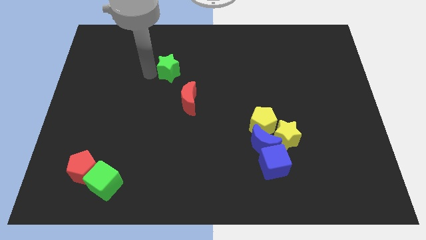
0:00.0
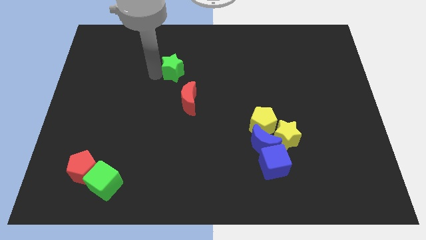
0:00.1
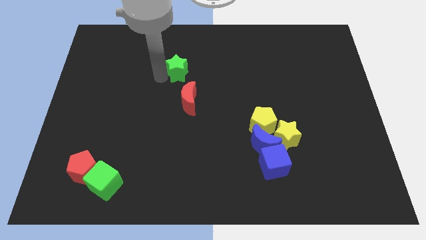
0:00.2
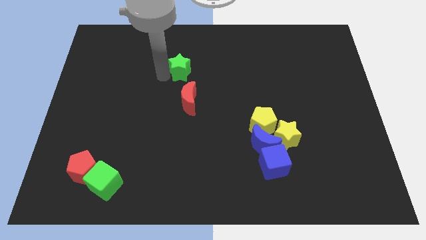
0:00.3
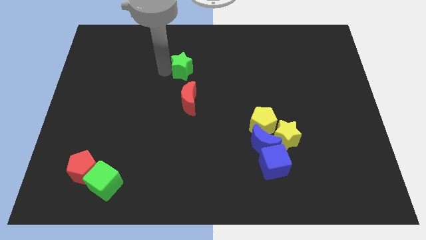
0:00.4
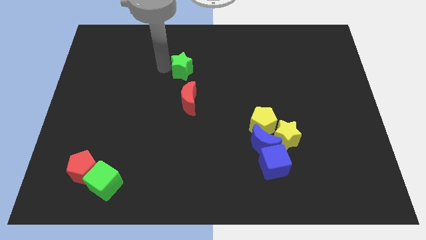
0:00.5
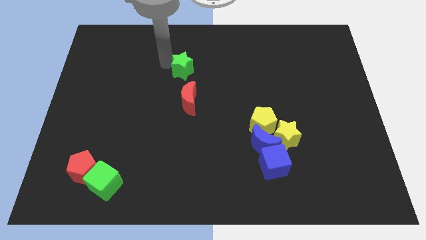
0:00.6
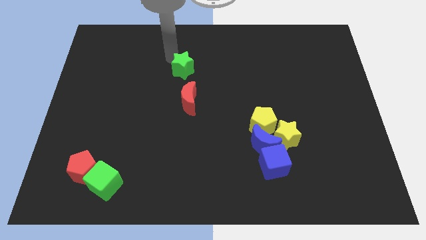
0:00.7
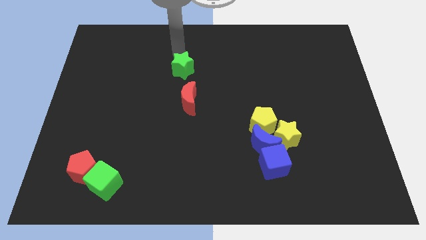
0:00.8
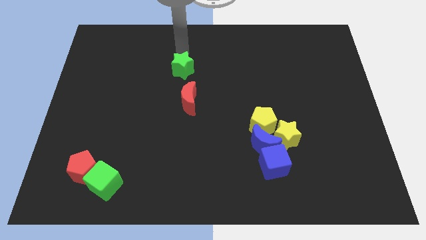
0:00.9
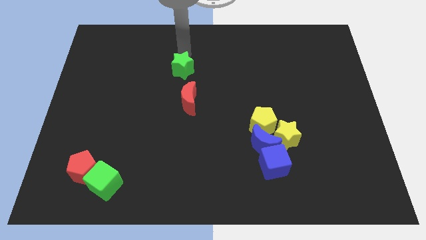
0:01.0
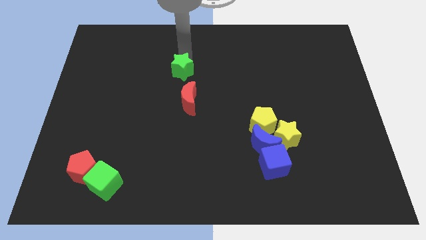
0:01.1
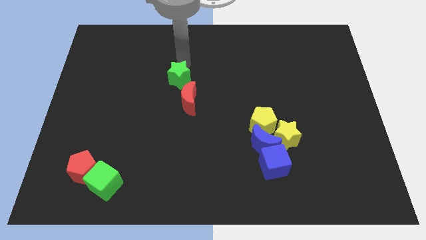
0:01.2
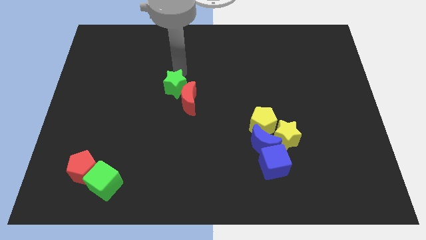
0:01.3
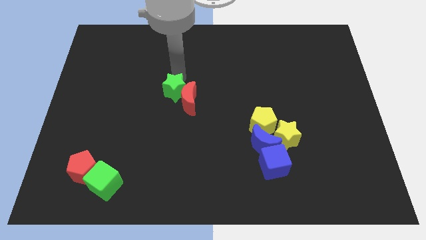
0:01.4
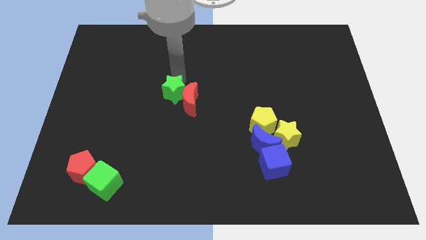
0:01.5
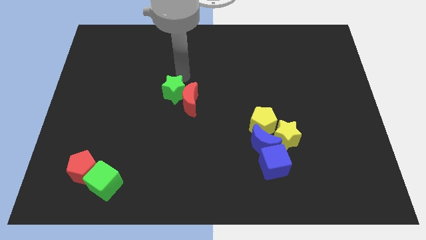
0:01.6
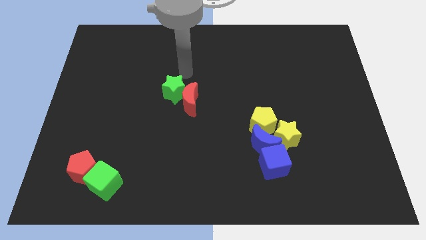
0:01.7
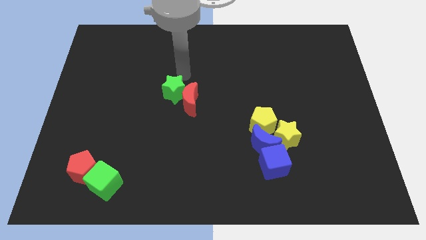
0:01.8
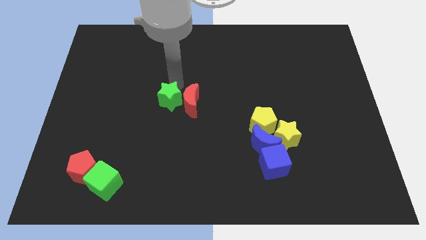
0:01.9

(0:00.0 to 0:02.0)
push the green star to the left of the red crescent

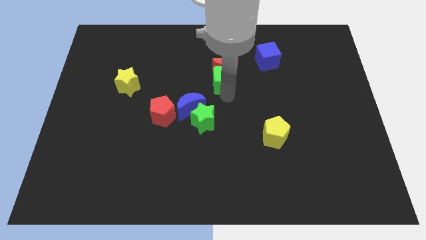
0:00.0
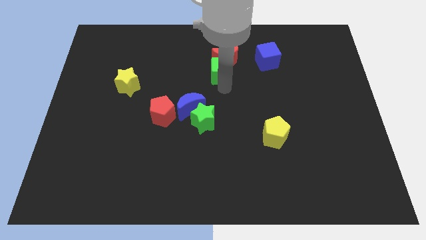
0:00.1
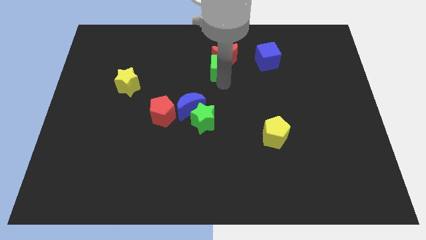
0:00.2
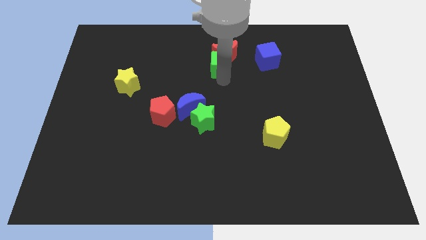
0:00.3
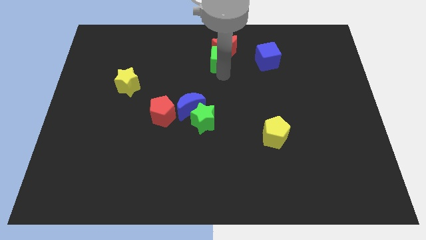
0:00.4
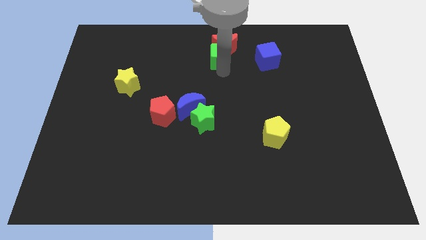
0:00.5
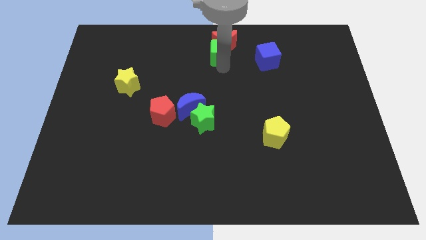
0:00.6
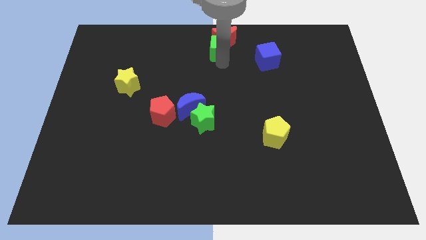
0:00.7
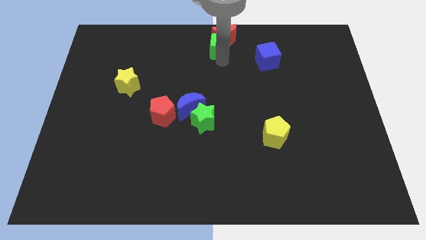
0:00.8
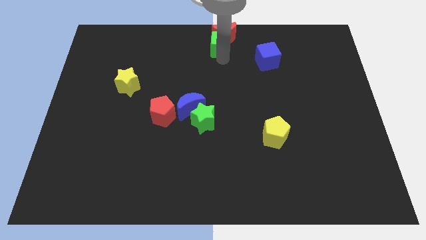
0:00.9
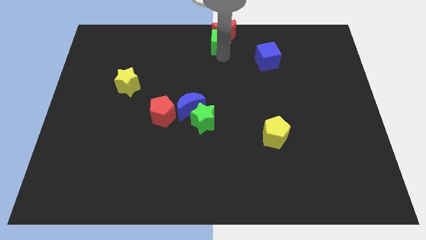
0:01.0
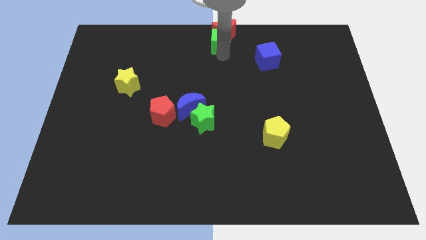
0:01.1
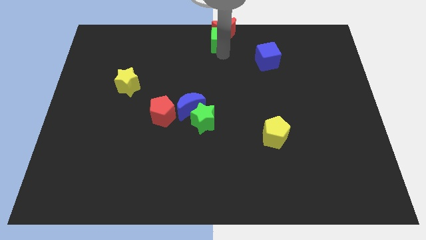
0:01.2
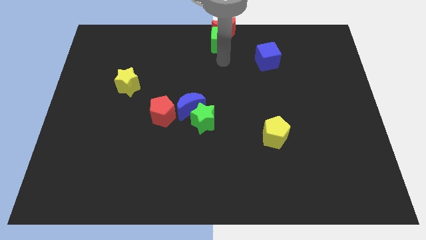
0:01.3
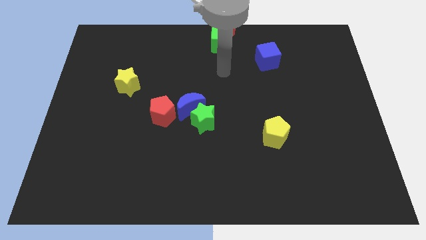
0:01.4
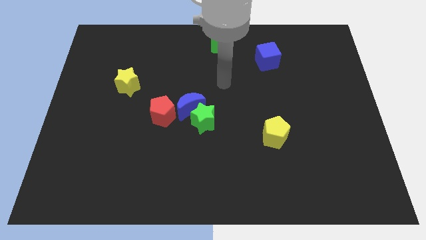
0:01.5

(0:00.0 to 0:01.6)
move green cube and red crescent towards the top center of the board

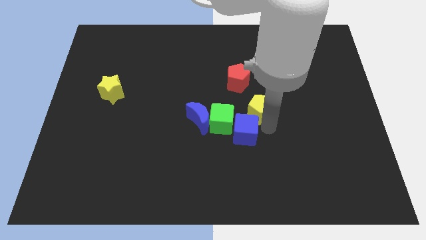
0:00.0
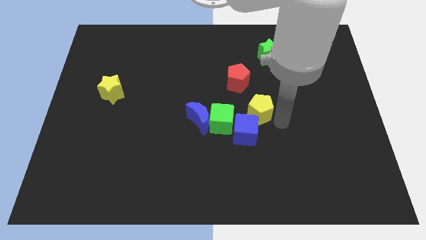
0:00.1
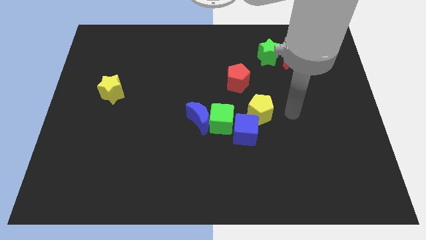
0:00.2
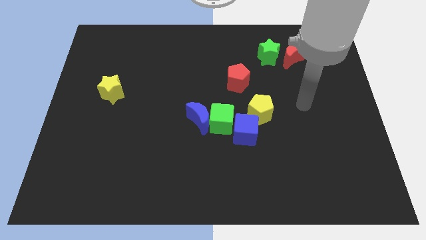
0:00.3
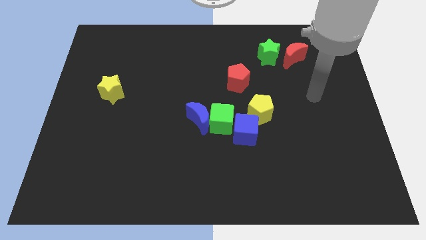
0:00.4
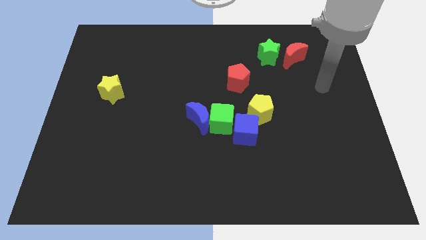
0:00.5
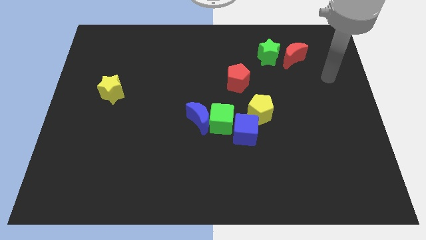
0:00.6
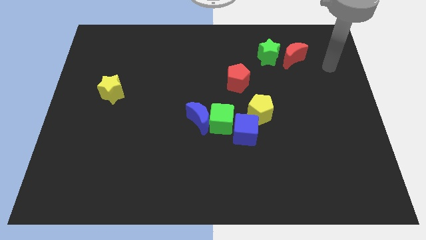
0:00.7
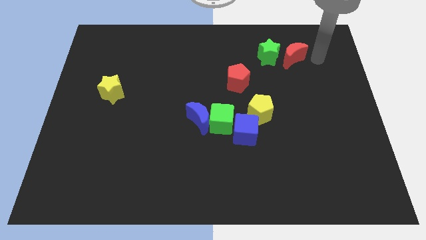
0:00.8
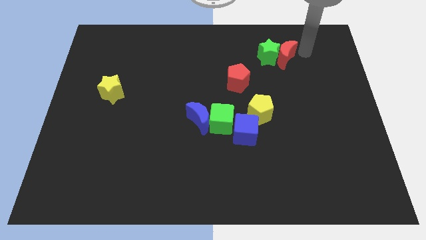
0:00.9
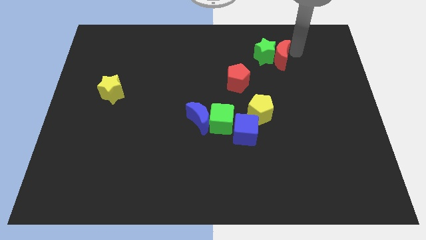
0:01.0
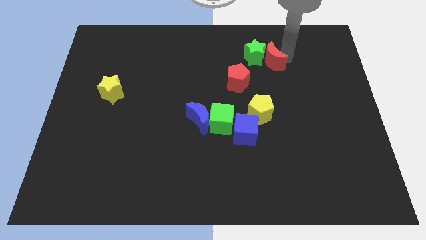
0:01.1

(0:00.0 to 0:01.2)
push the red crescent into the green star

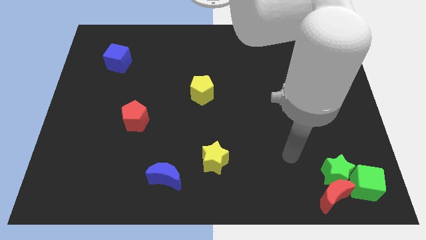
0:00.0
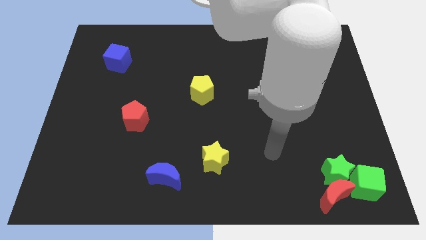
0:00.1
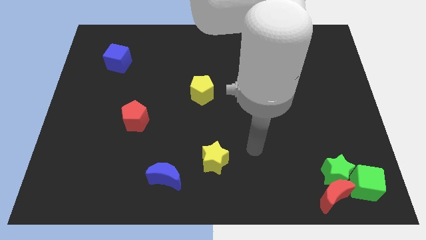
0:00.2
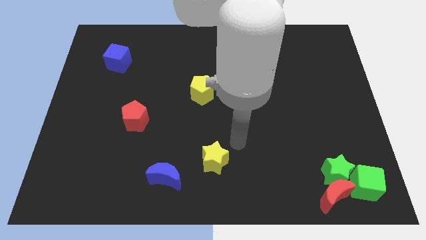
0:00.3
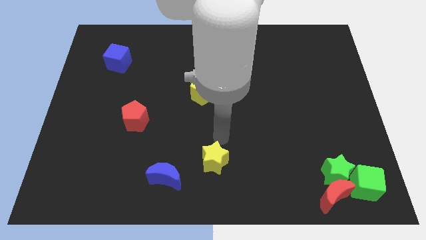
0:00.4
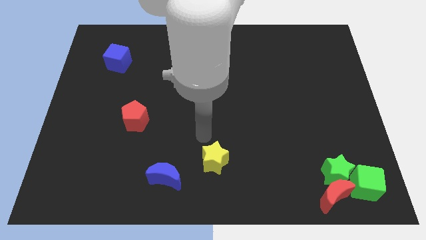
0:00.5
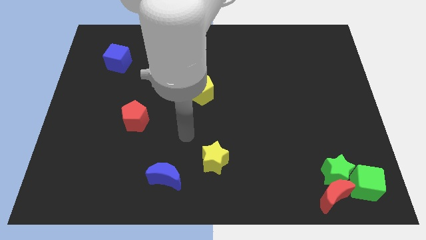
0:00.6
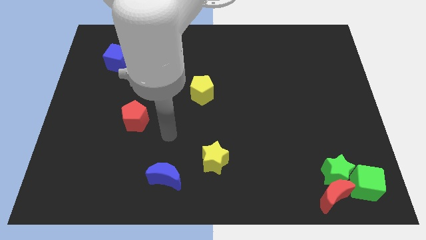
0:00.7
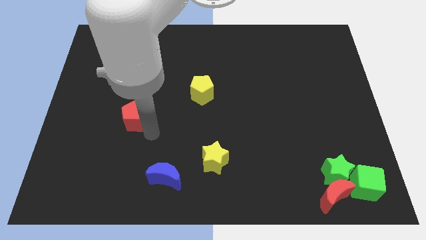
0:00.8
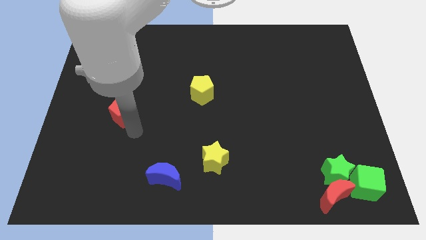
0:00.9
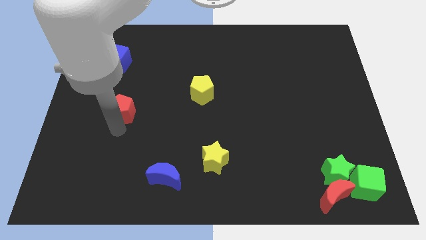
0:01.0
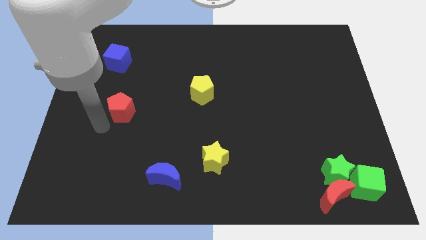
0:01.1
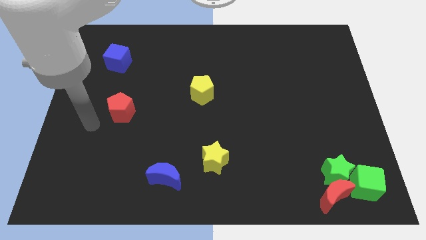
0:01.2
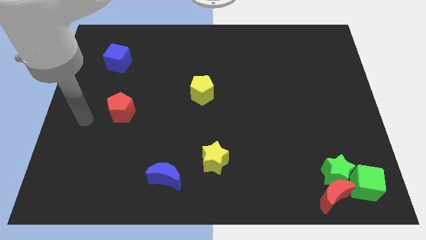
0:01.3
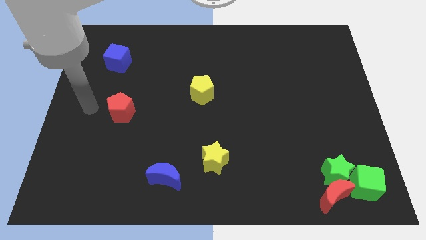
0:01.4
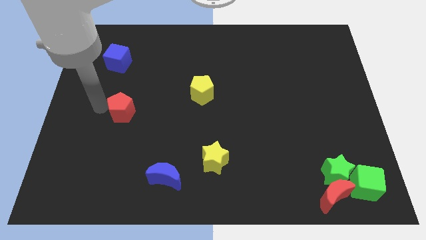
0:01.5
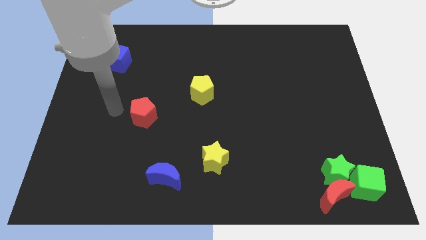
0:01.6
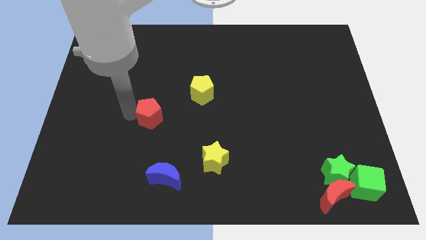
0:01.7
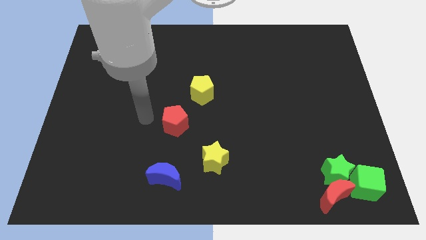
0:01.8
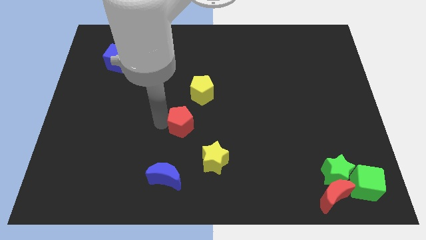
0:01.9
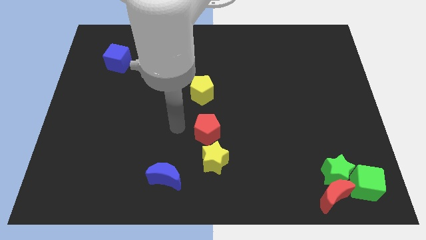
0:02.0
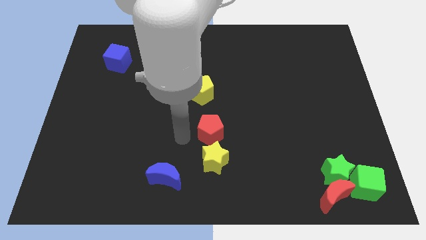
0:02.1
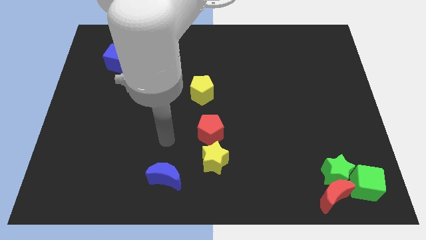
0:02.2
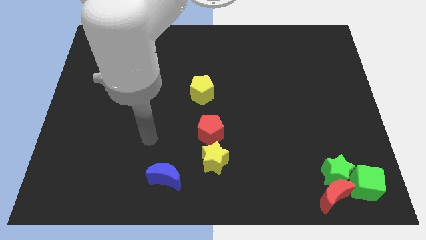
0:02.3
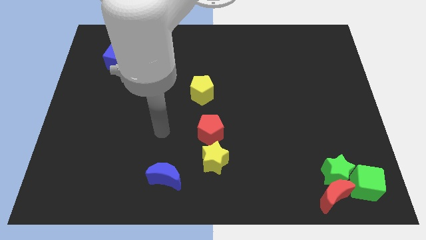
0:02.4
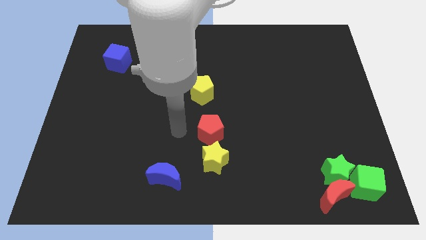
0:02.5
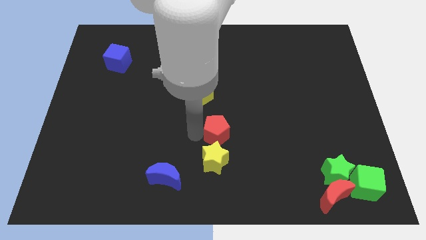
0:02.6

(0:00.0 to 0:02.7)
push the red pentagon on top of the yellow star

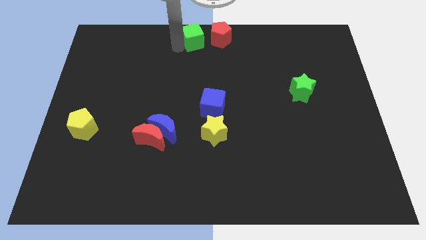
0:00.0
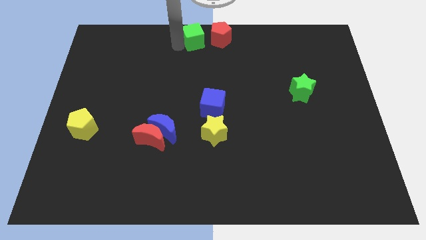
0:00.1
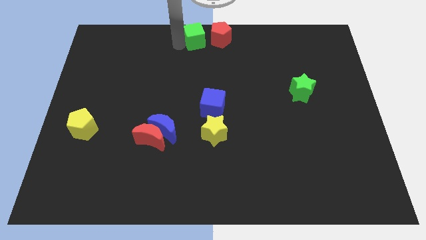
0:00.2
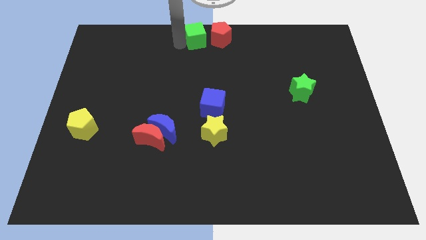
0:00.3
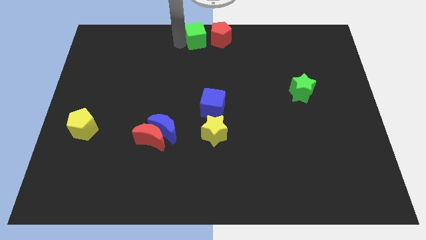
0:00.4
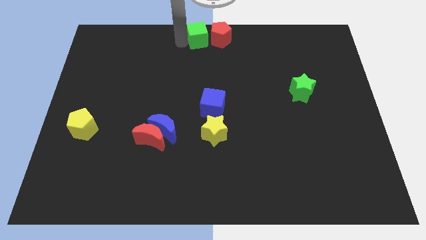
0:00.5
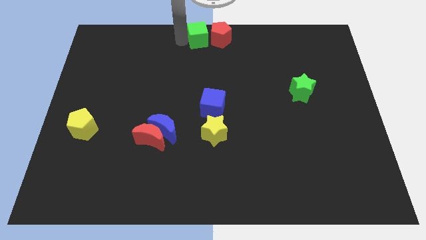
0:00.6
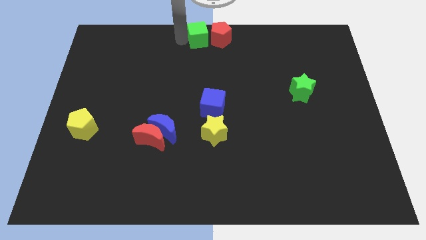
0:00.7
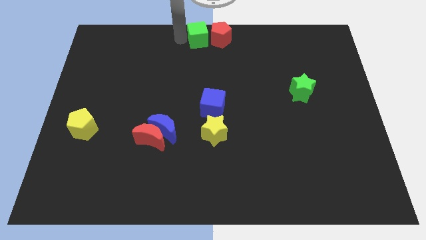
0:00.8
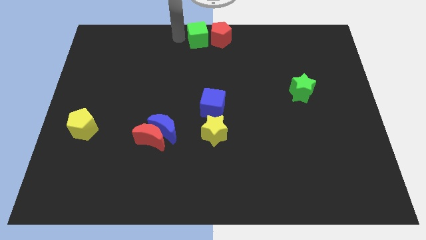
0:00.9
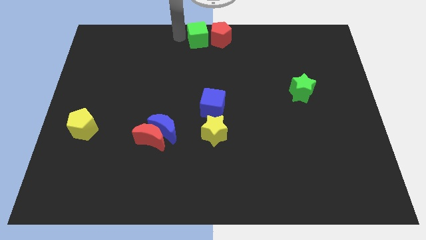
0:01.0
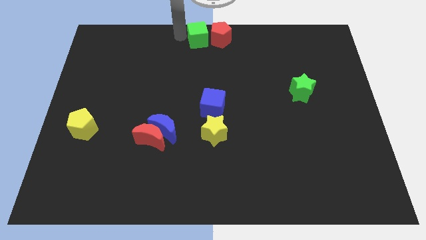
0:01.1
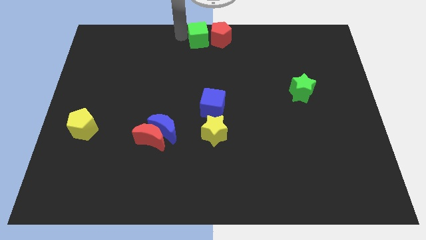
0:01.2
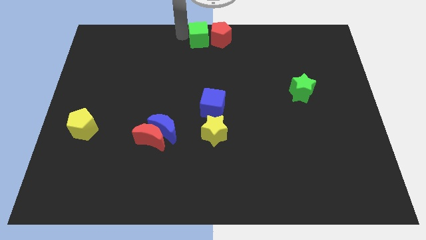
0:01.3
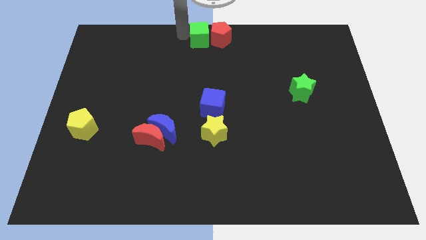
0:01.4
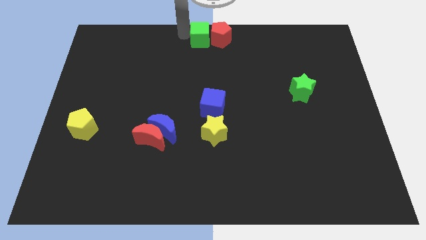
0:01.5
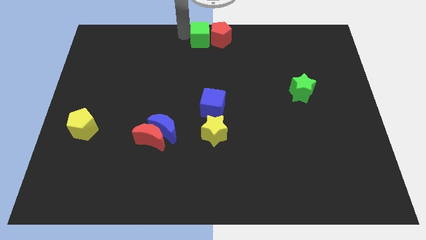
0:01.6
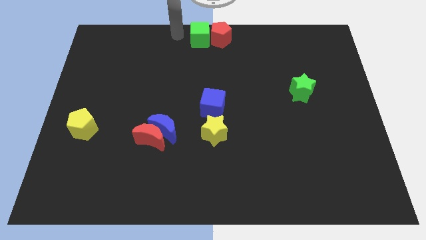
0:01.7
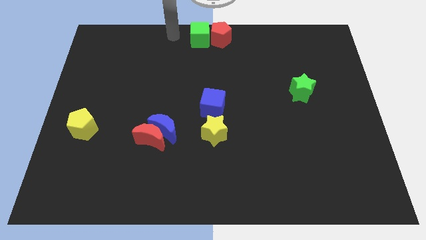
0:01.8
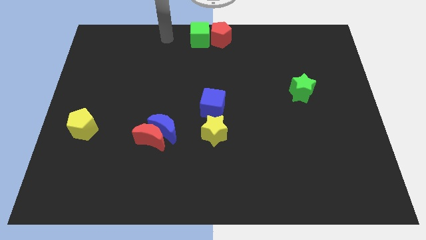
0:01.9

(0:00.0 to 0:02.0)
put the green cube to the left side of the red pentagon
